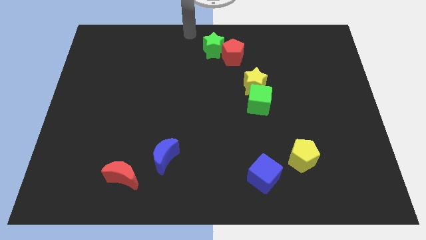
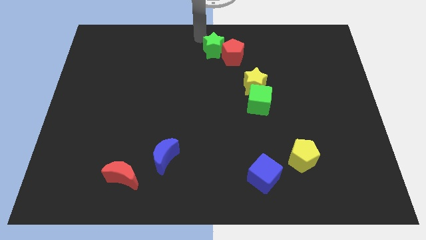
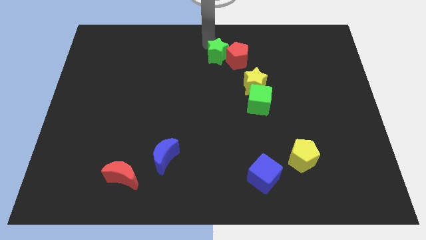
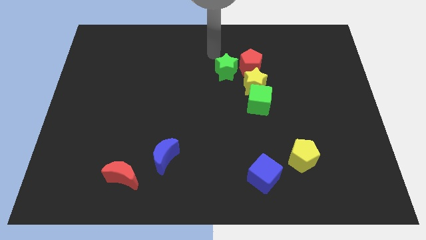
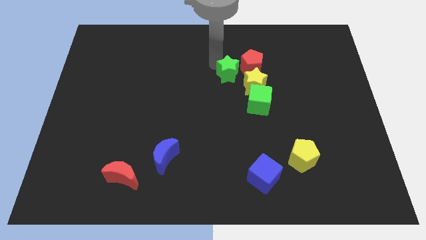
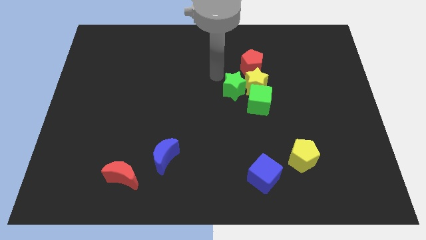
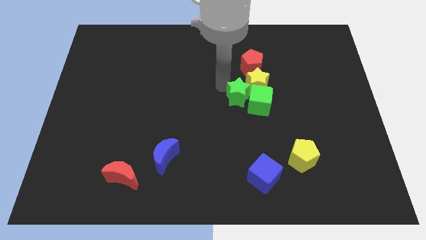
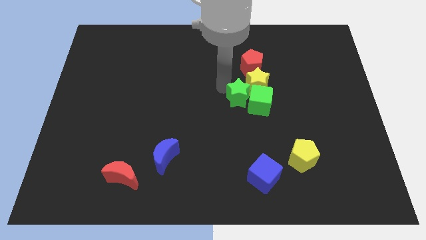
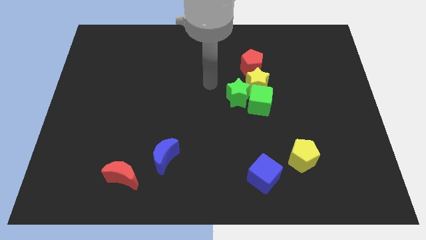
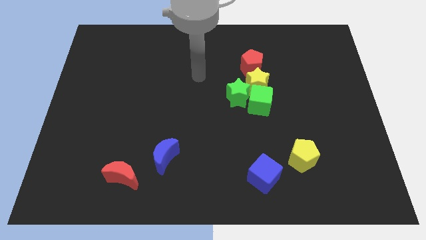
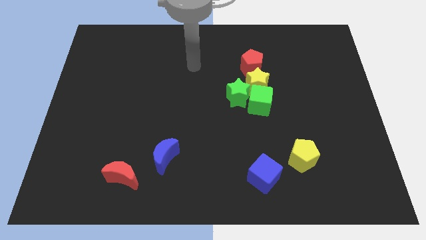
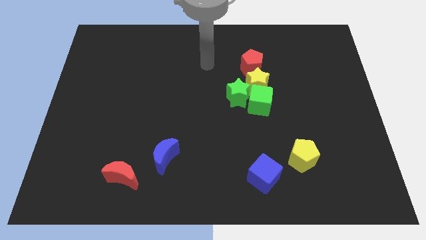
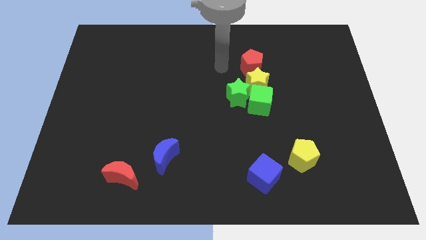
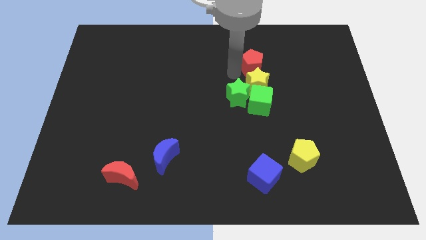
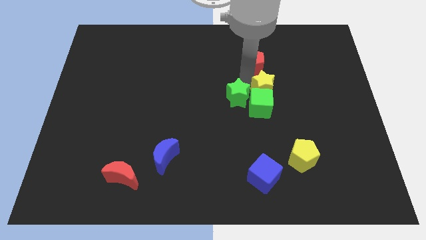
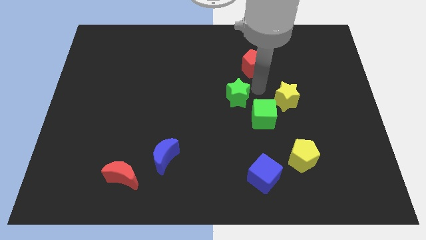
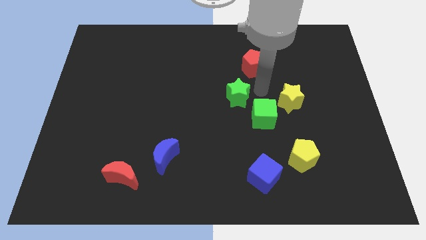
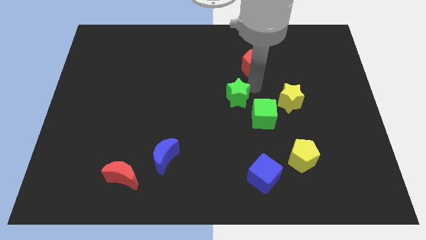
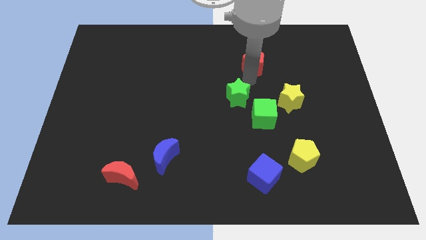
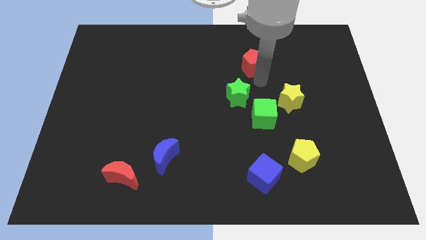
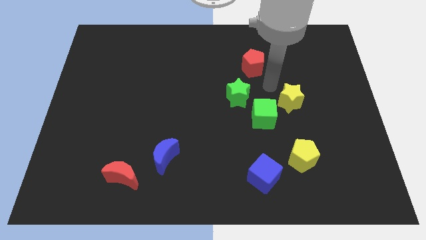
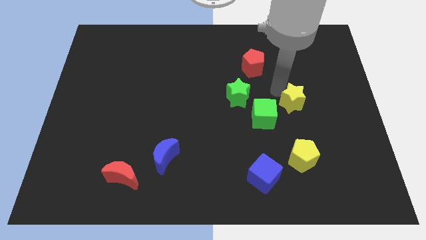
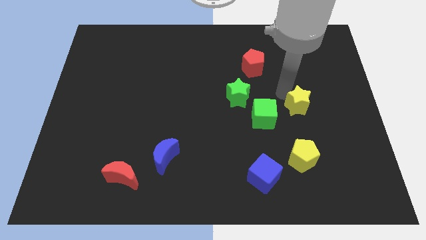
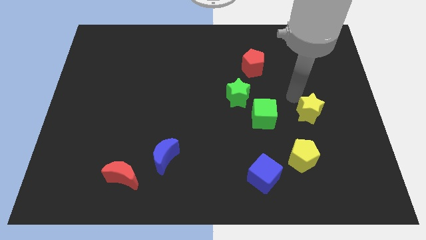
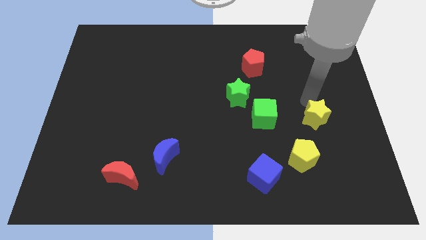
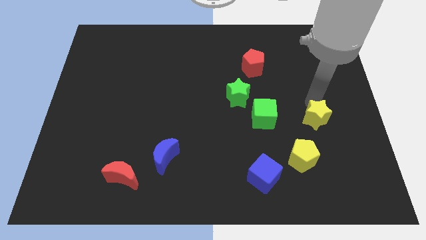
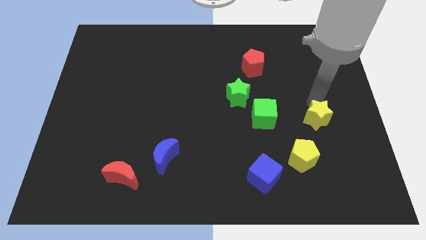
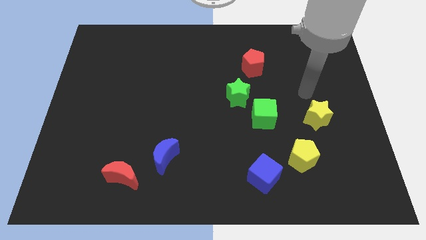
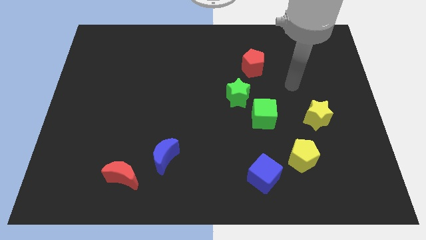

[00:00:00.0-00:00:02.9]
drag the yellow star slightly downwards

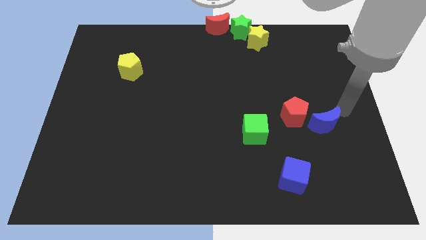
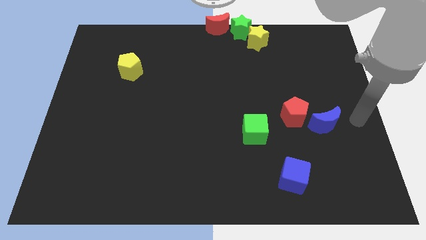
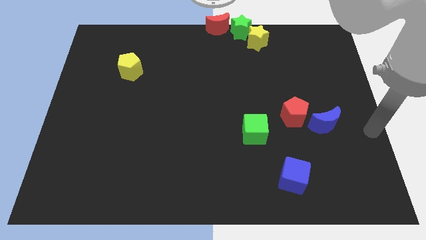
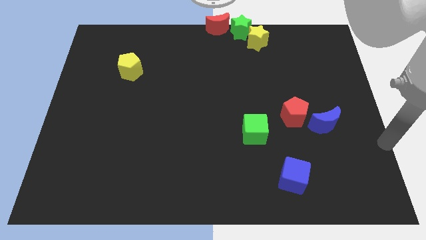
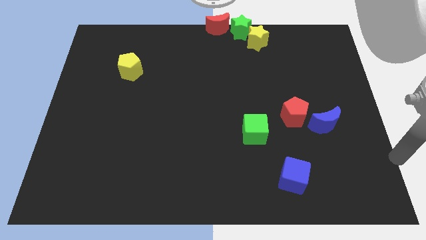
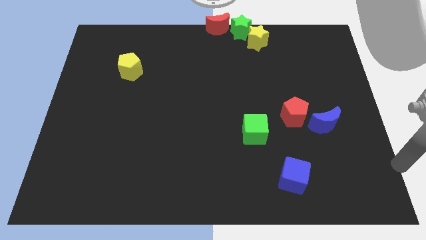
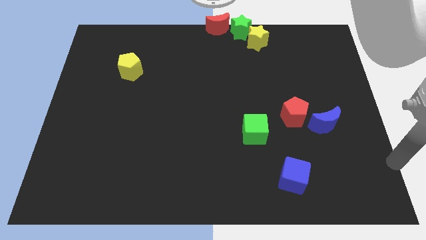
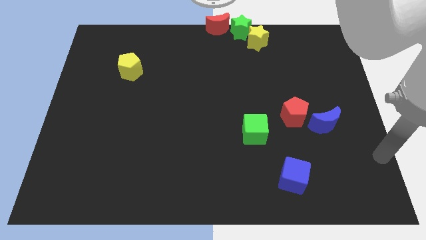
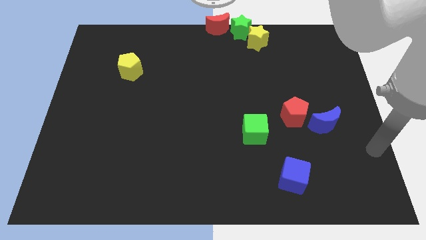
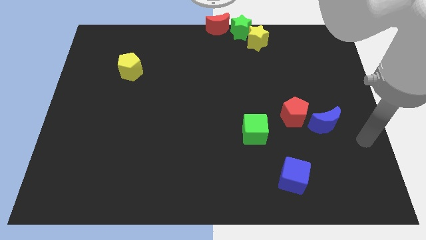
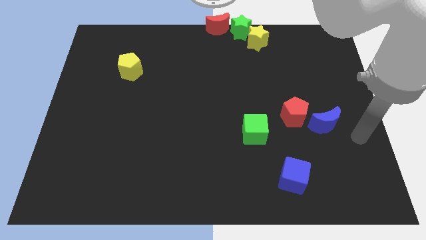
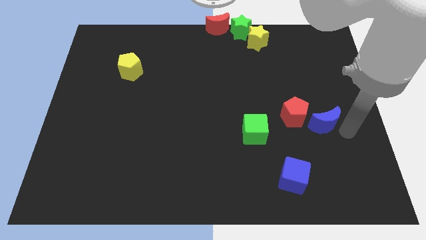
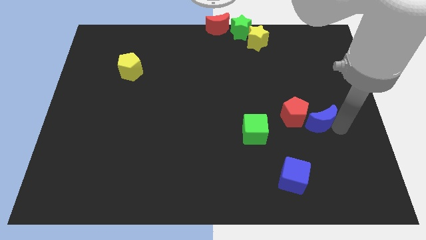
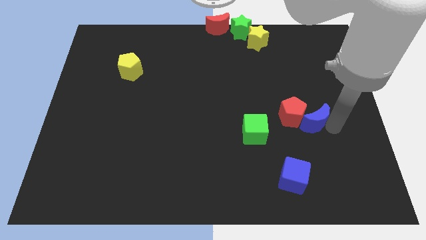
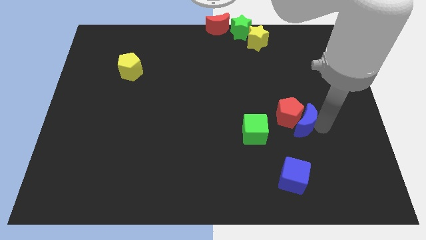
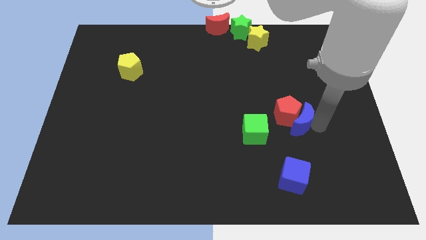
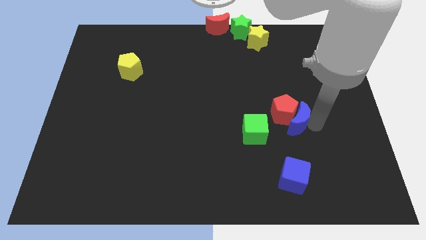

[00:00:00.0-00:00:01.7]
slide the blue moon into the red crescent

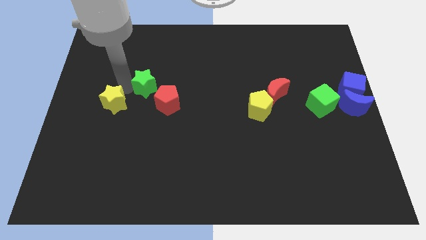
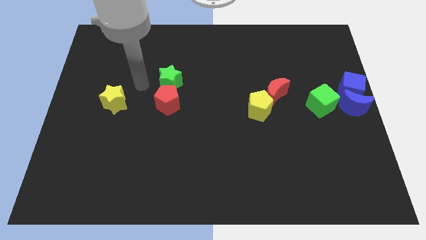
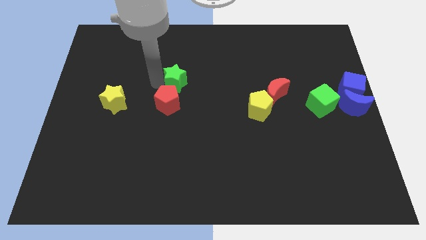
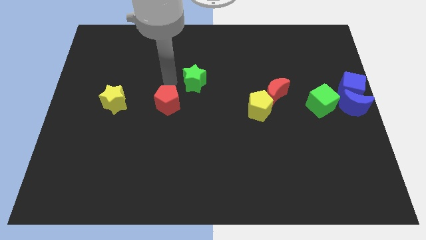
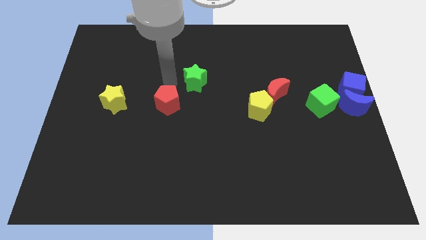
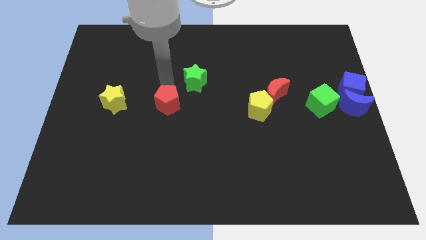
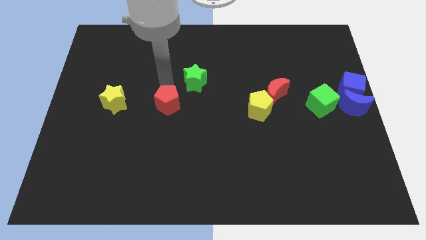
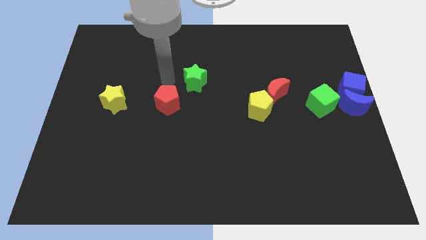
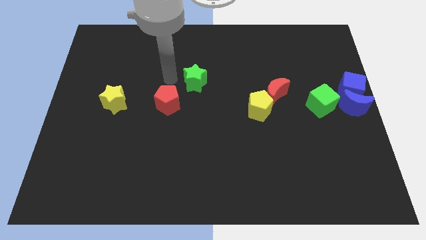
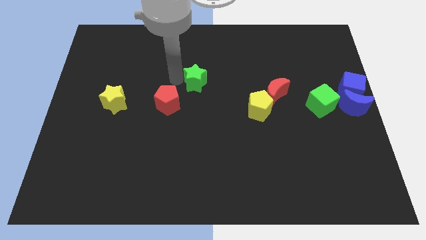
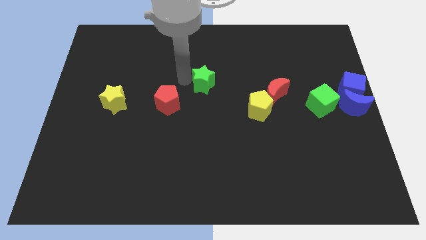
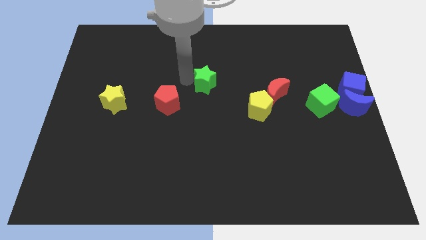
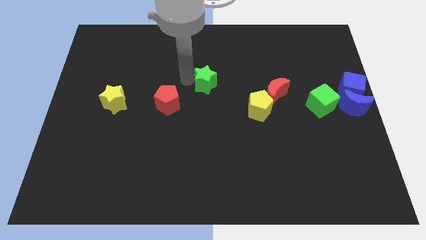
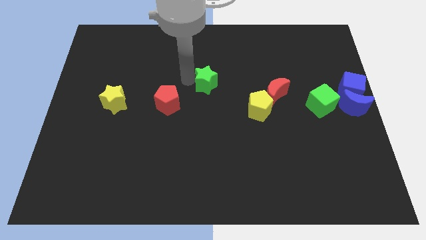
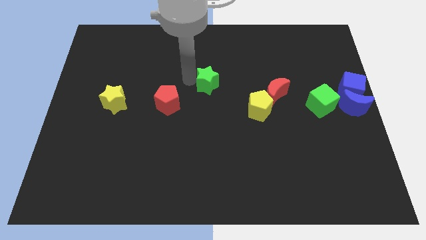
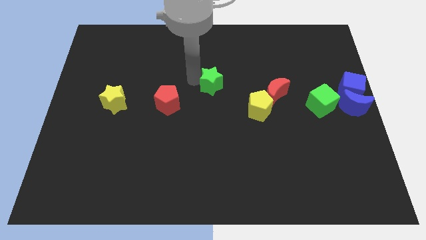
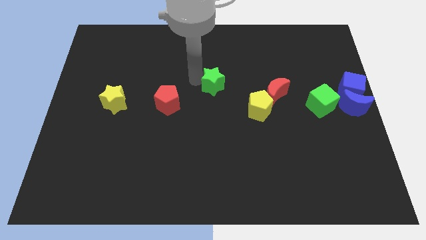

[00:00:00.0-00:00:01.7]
push the green star diagonal to the top right side of the red pentagon

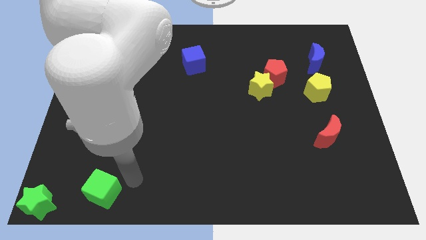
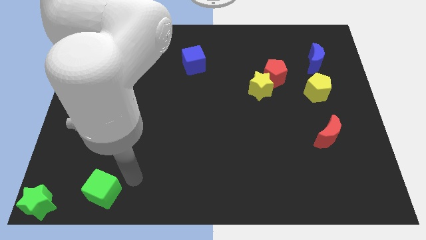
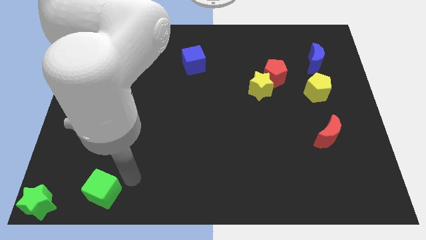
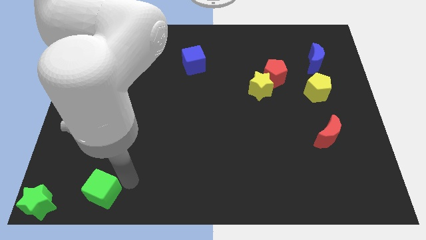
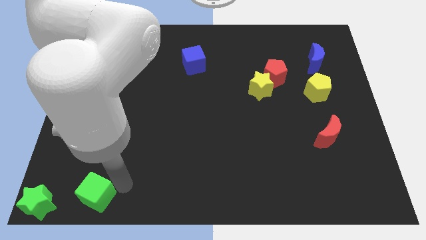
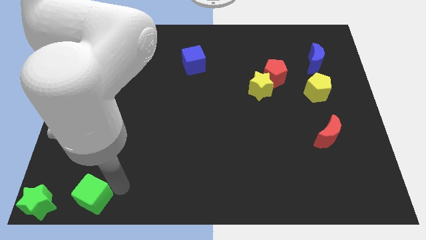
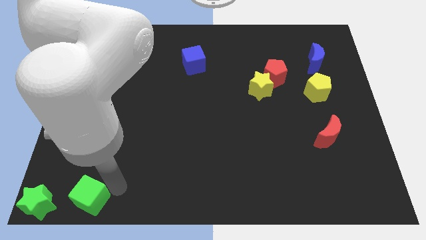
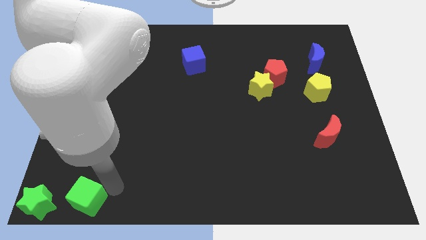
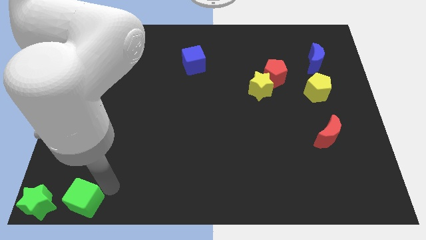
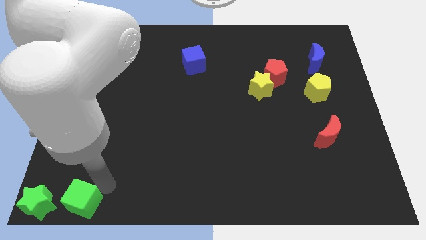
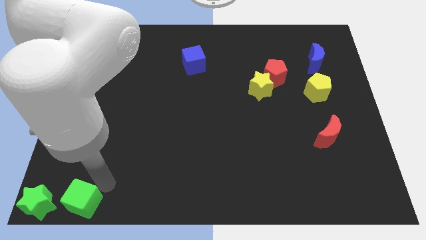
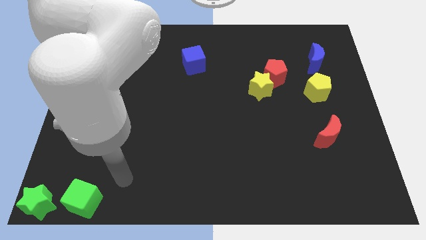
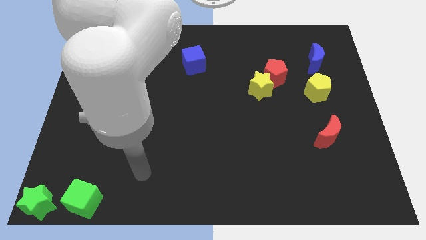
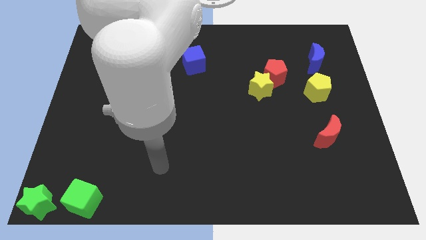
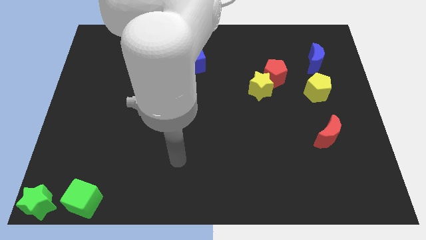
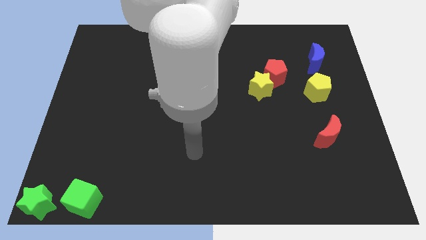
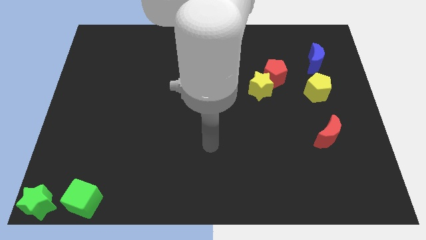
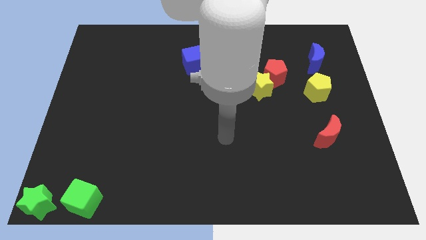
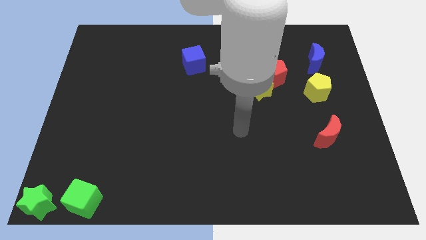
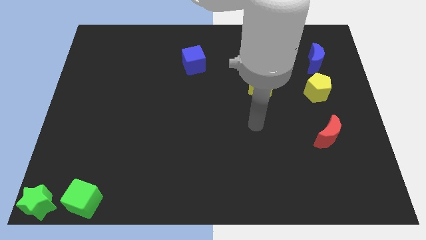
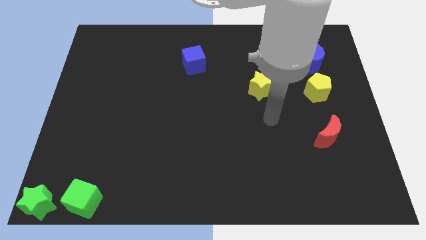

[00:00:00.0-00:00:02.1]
put the green cube right to the green star

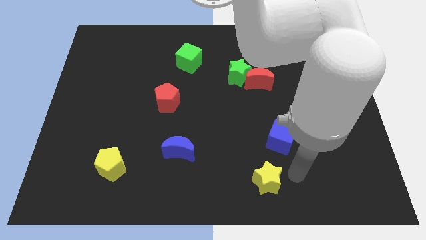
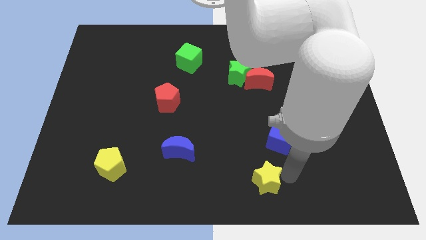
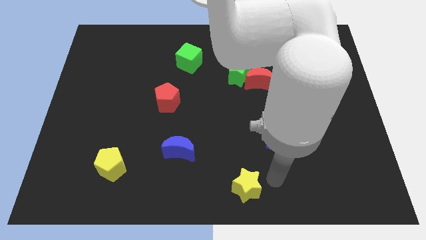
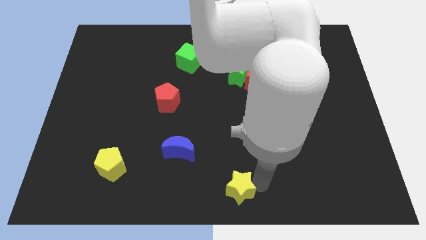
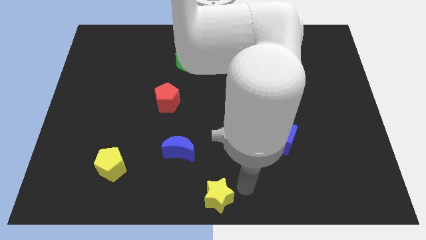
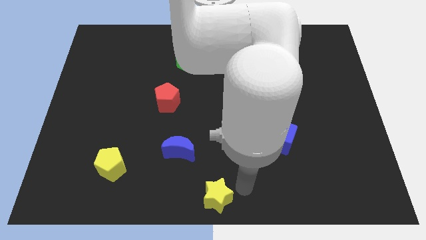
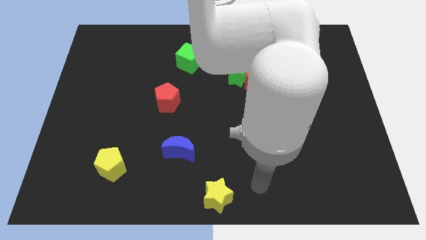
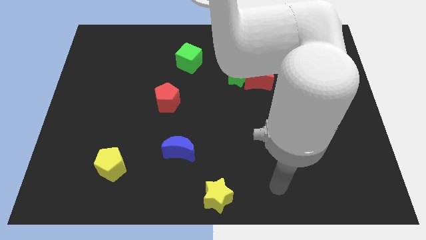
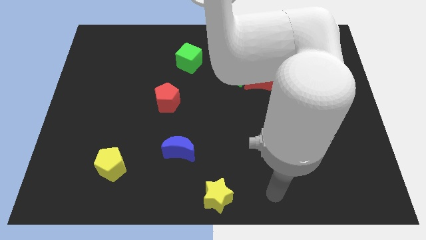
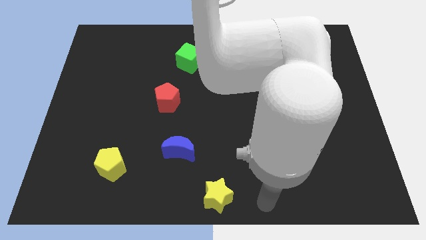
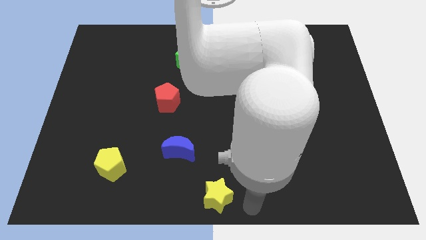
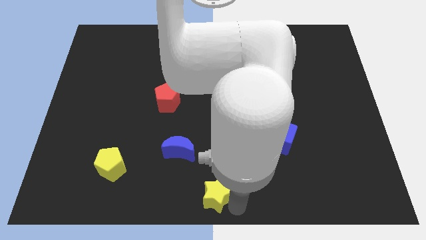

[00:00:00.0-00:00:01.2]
push the yellow star to the bottom center
